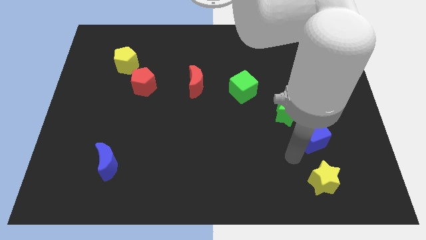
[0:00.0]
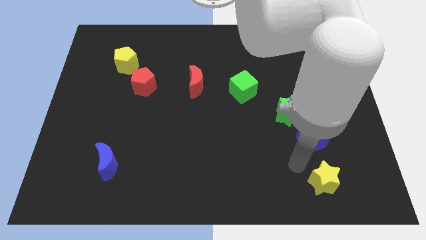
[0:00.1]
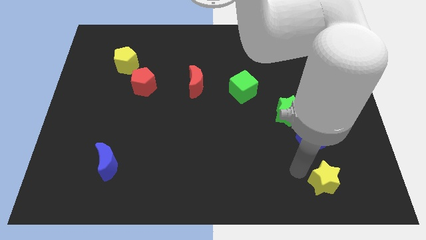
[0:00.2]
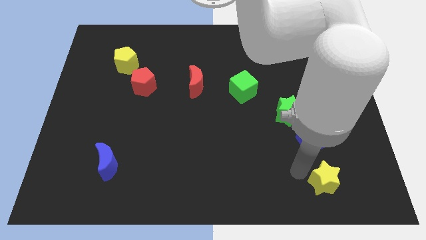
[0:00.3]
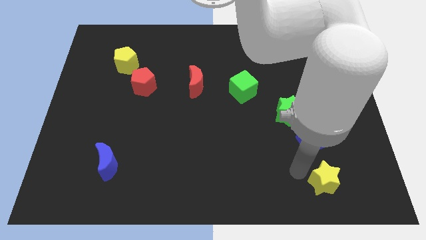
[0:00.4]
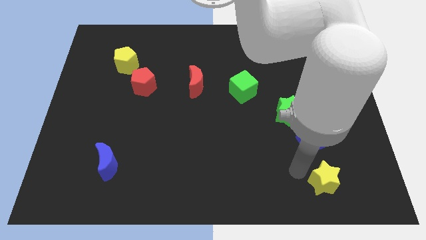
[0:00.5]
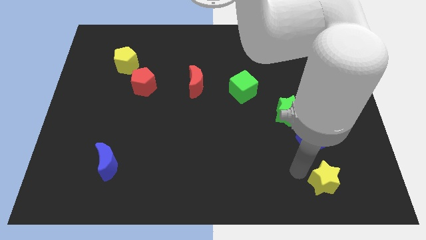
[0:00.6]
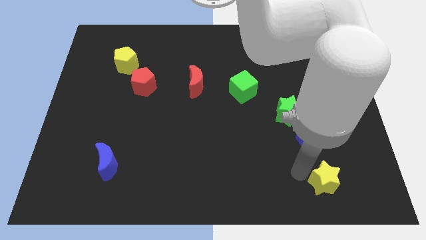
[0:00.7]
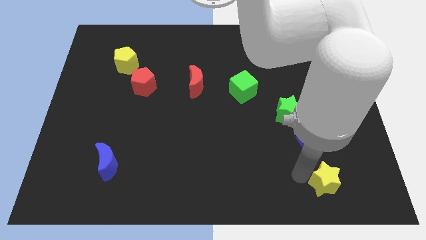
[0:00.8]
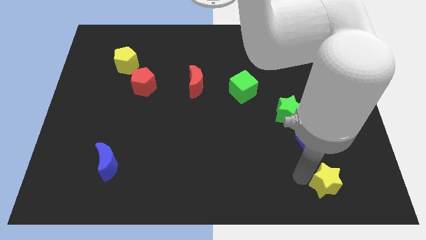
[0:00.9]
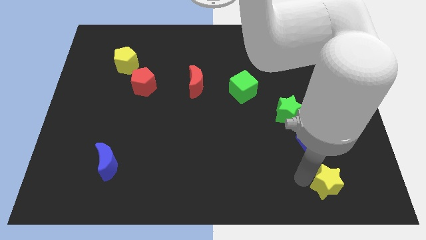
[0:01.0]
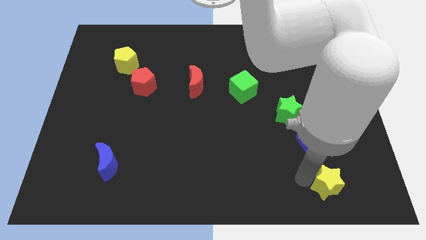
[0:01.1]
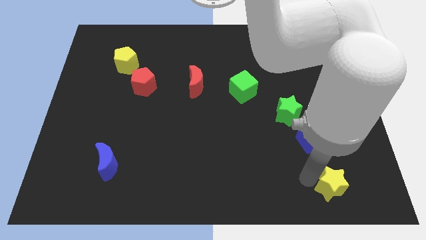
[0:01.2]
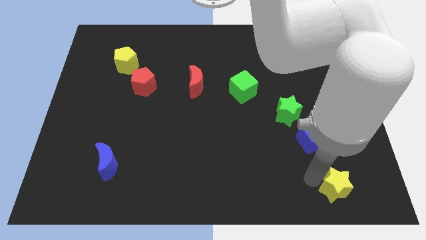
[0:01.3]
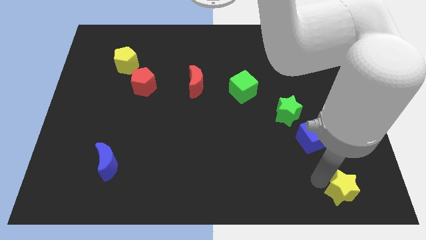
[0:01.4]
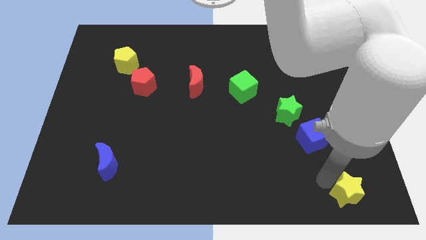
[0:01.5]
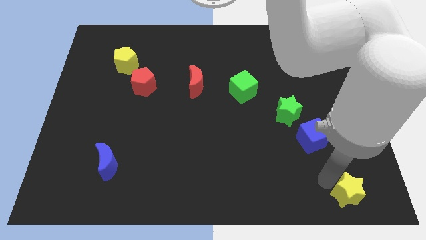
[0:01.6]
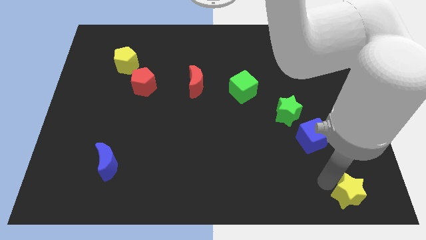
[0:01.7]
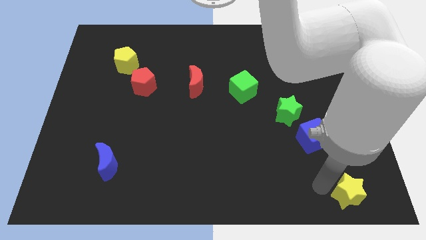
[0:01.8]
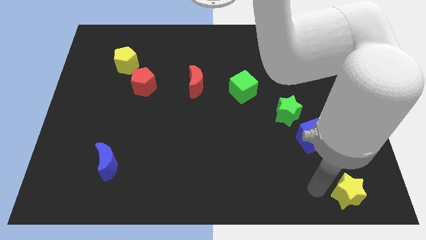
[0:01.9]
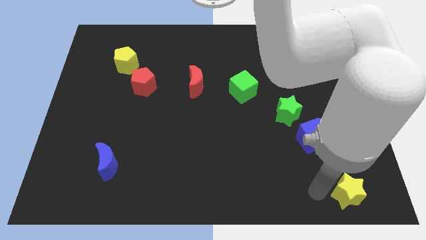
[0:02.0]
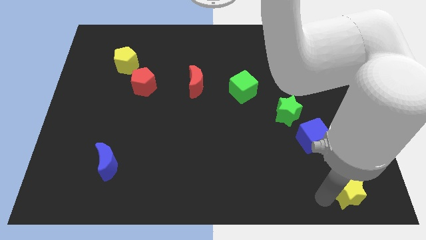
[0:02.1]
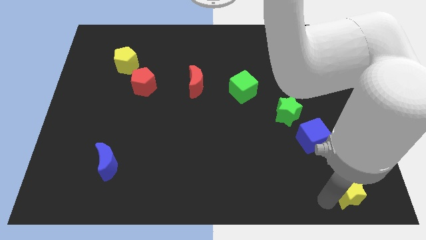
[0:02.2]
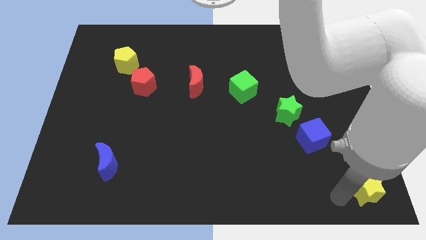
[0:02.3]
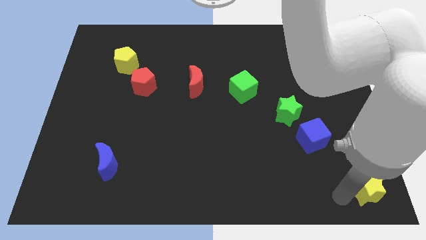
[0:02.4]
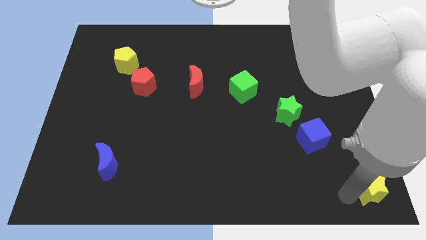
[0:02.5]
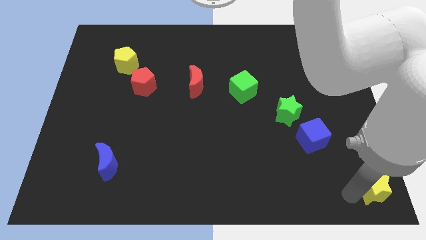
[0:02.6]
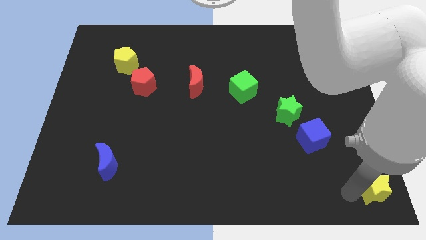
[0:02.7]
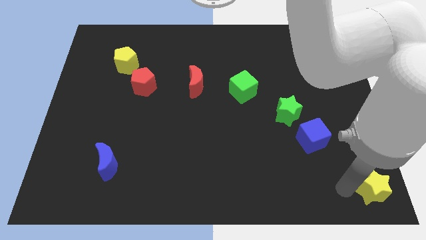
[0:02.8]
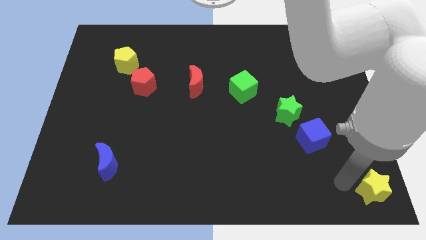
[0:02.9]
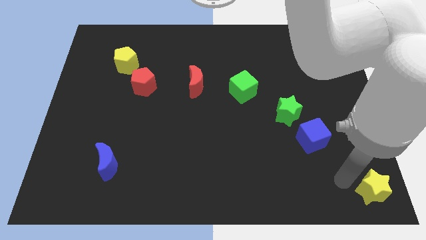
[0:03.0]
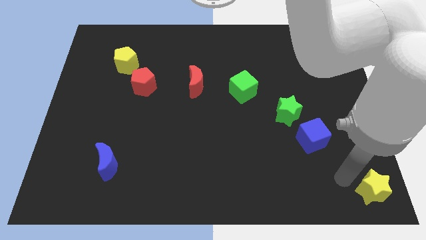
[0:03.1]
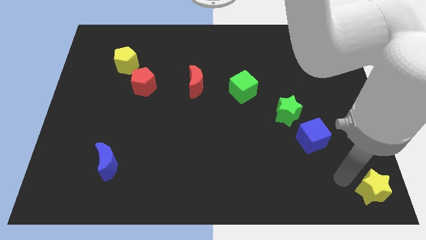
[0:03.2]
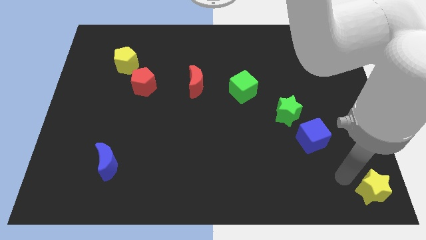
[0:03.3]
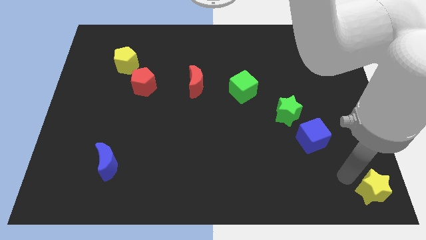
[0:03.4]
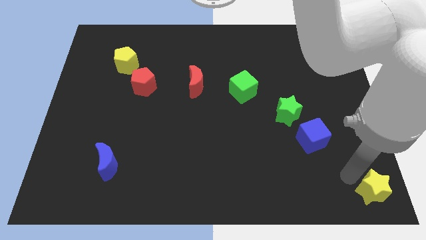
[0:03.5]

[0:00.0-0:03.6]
push the yellow star towards the bottom right

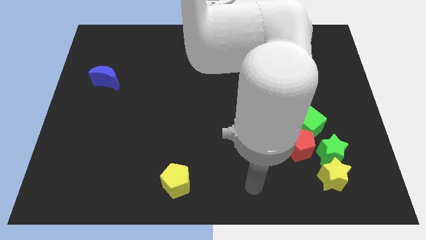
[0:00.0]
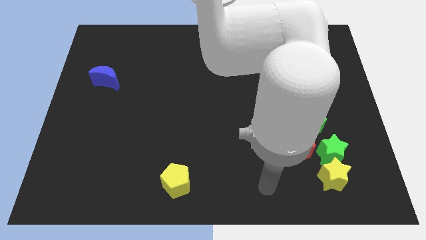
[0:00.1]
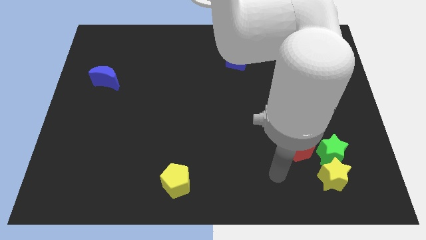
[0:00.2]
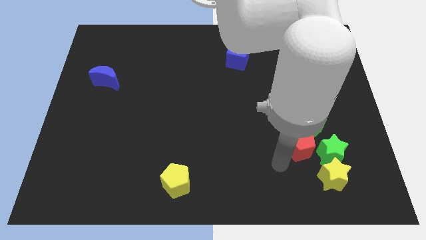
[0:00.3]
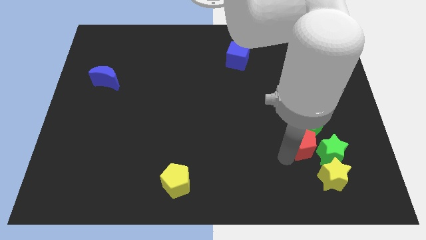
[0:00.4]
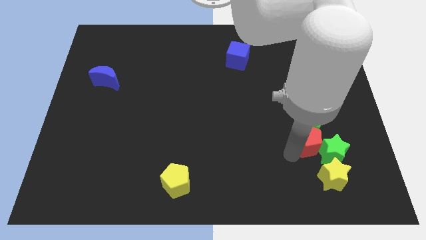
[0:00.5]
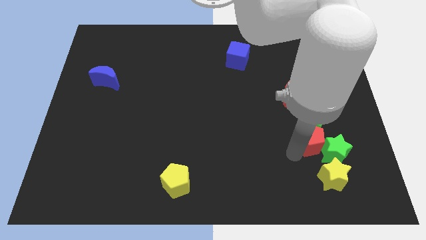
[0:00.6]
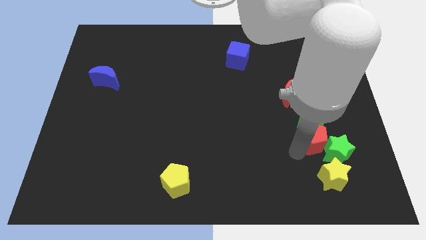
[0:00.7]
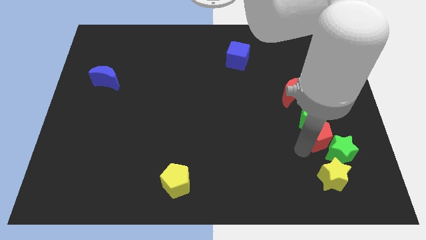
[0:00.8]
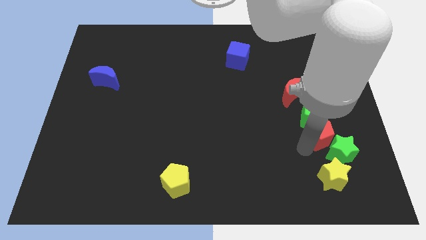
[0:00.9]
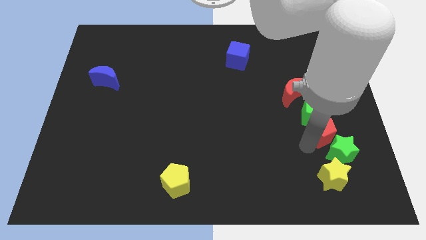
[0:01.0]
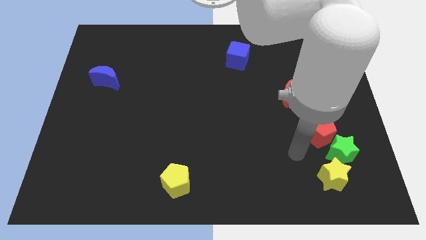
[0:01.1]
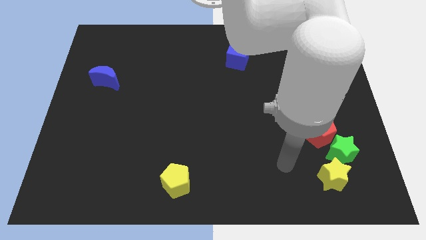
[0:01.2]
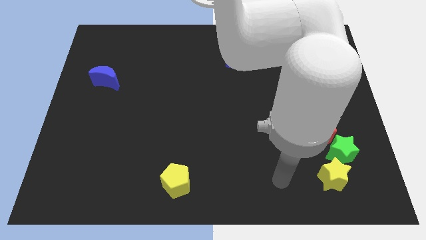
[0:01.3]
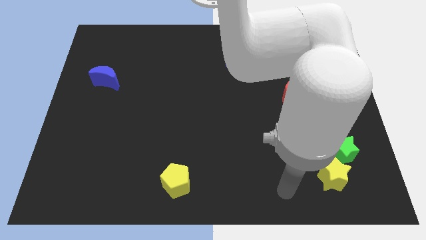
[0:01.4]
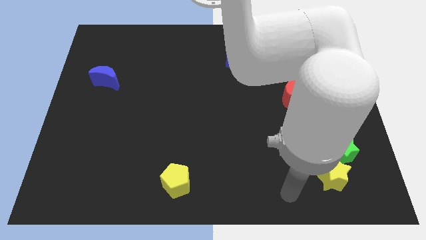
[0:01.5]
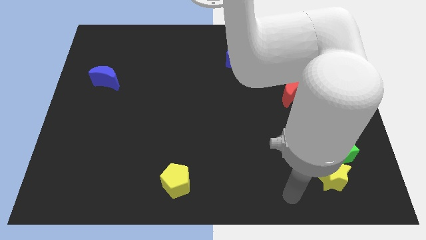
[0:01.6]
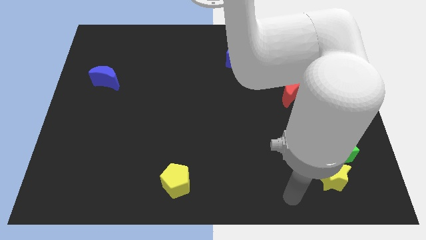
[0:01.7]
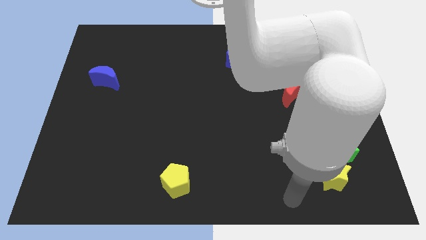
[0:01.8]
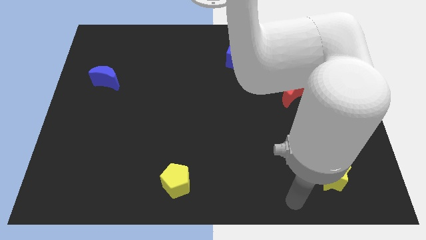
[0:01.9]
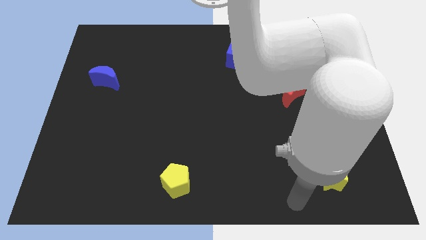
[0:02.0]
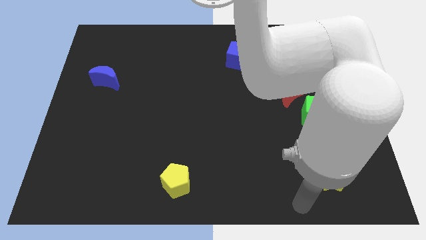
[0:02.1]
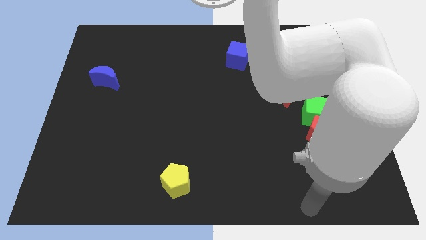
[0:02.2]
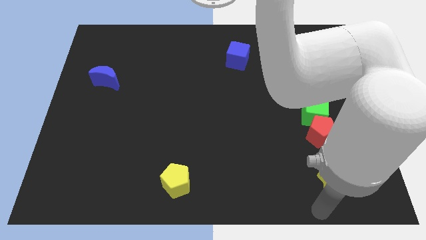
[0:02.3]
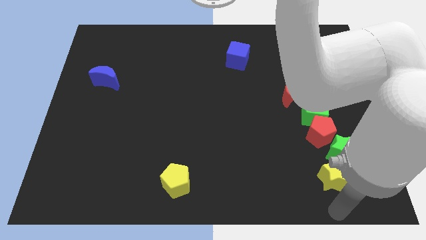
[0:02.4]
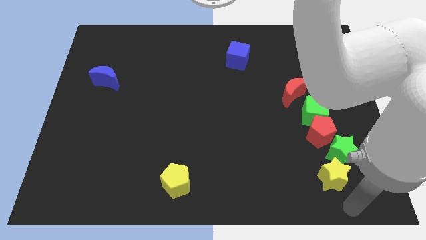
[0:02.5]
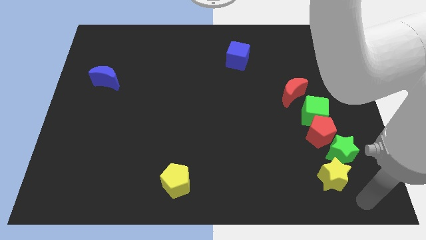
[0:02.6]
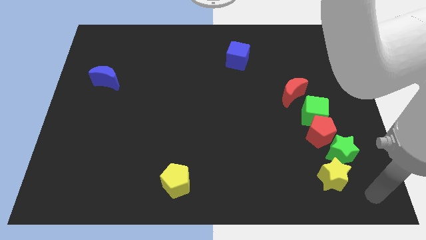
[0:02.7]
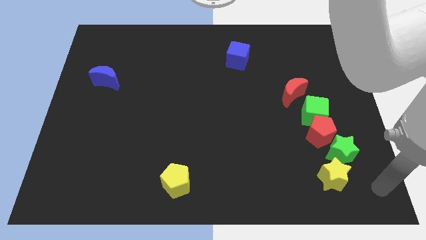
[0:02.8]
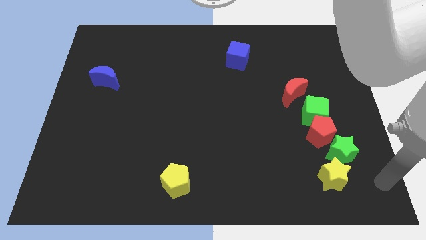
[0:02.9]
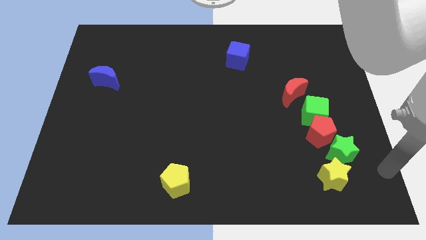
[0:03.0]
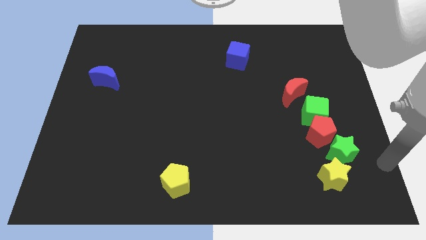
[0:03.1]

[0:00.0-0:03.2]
push red pentagon in between green blocks

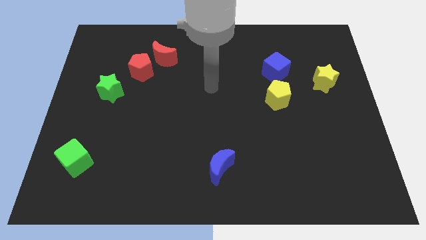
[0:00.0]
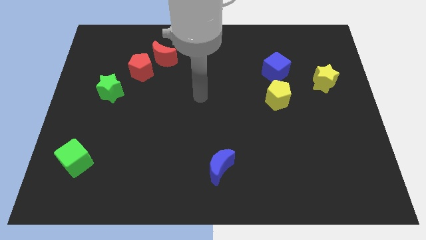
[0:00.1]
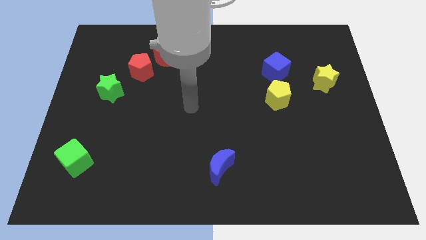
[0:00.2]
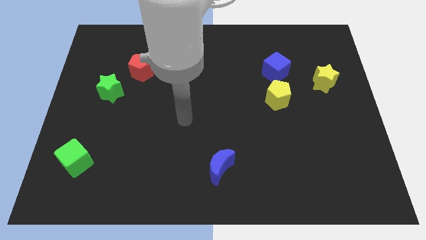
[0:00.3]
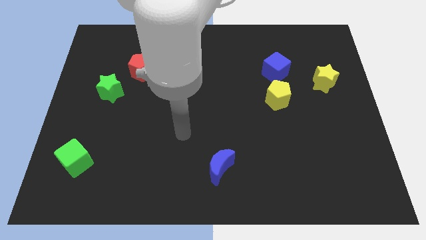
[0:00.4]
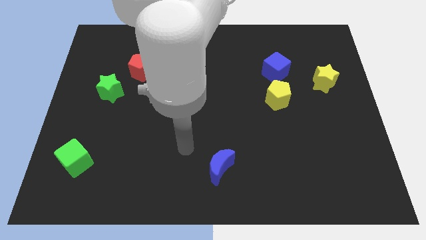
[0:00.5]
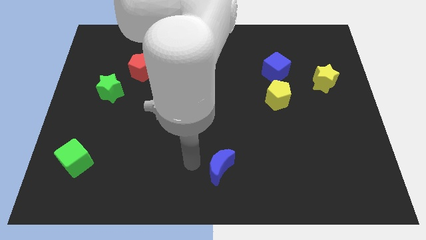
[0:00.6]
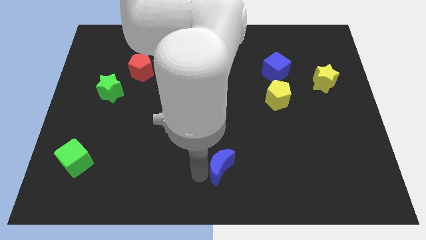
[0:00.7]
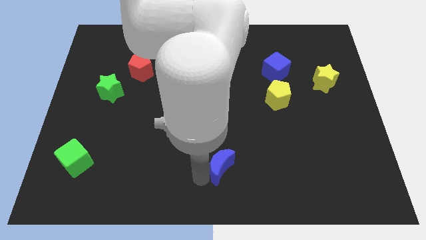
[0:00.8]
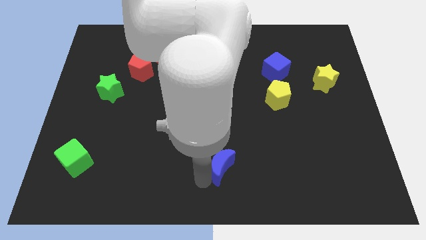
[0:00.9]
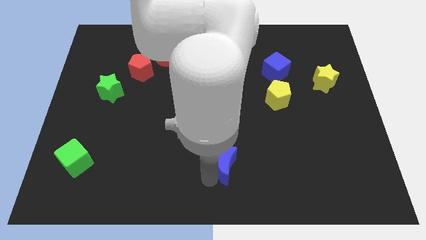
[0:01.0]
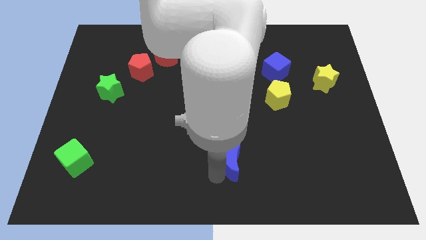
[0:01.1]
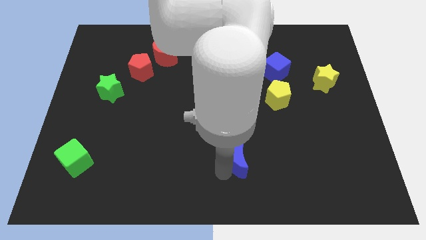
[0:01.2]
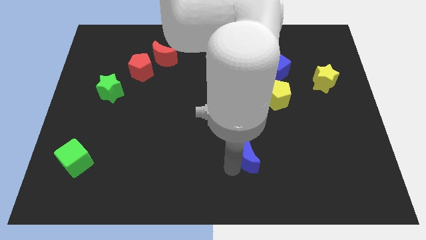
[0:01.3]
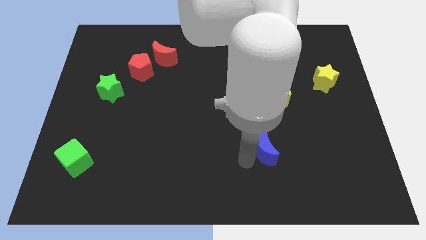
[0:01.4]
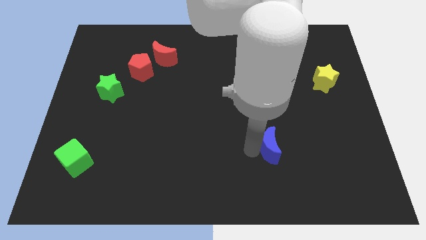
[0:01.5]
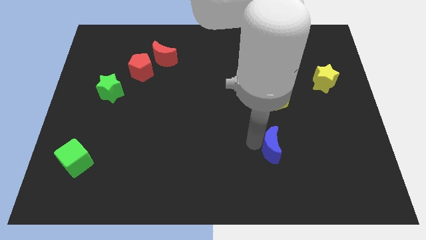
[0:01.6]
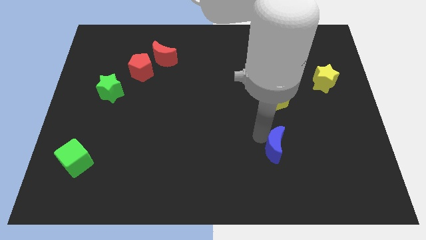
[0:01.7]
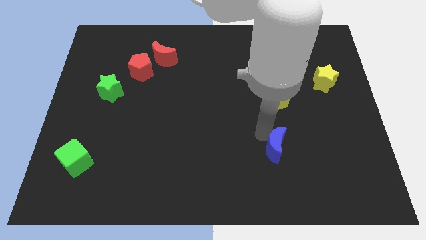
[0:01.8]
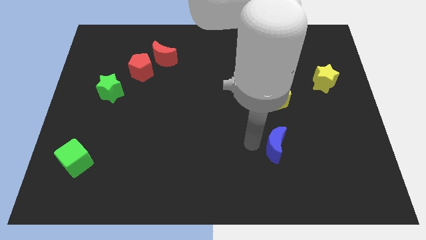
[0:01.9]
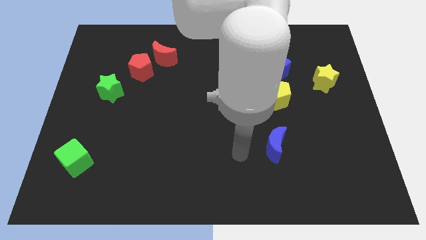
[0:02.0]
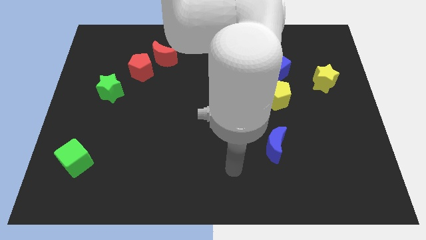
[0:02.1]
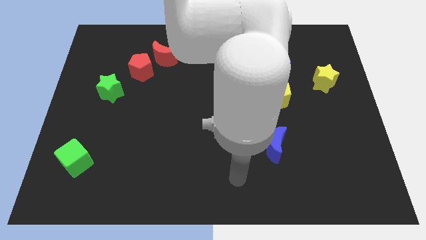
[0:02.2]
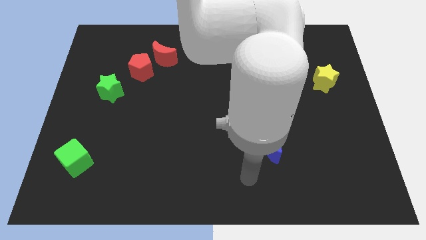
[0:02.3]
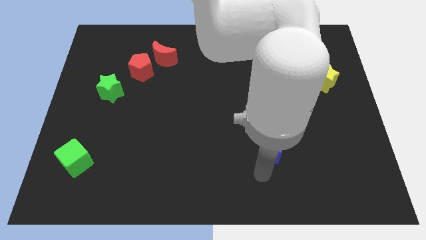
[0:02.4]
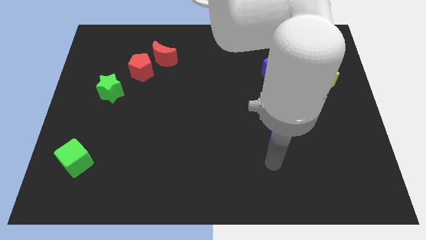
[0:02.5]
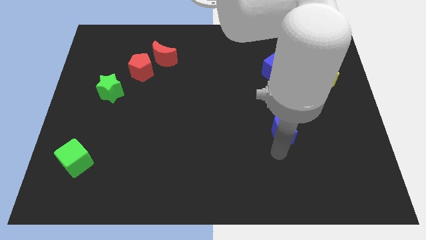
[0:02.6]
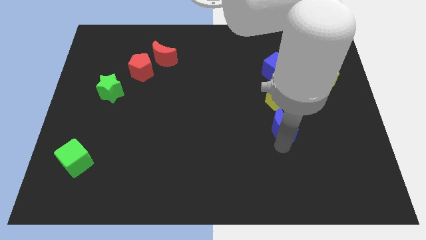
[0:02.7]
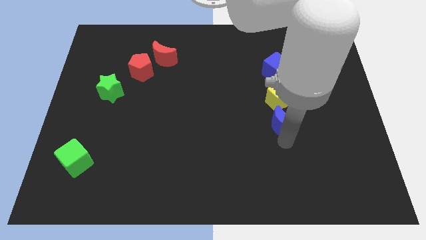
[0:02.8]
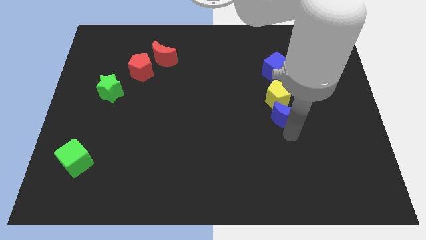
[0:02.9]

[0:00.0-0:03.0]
place blue moon below yellow pentagon
